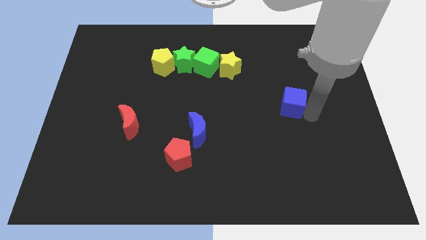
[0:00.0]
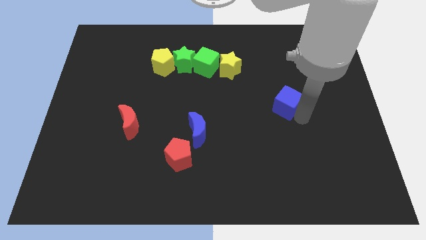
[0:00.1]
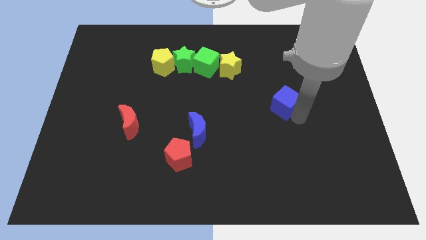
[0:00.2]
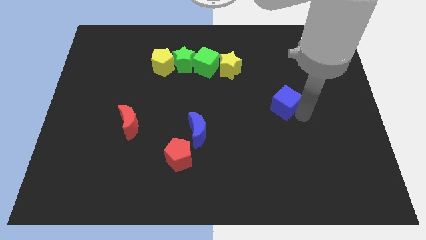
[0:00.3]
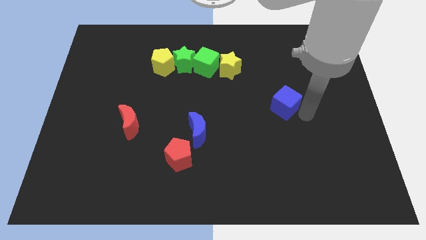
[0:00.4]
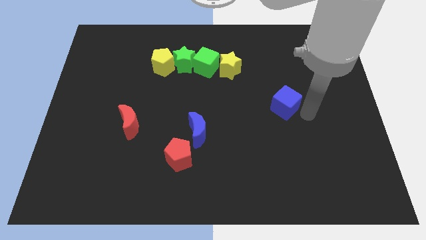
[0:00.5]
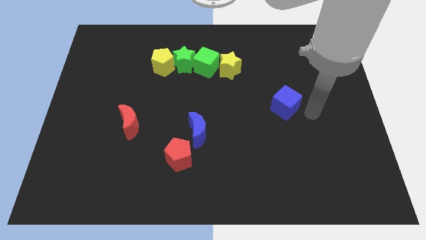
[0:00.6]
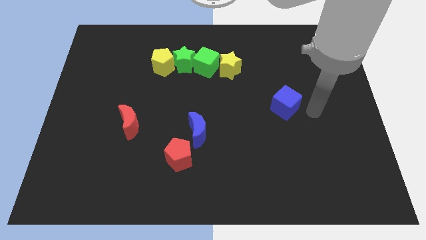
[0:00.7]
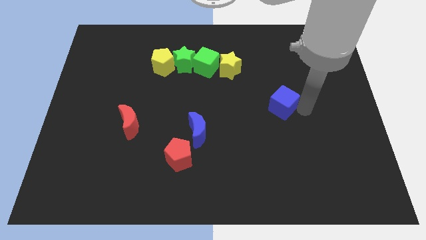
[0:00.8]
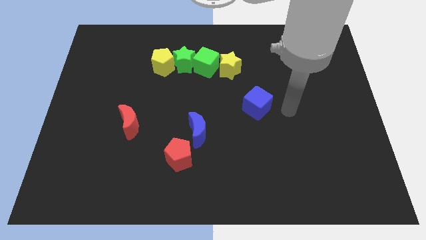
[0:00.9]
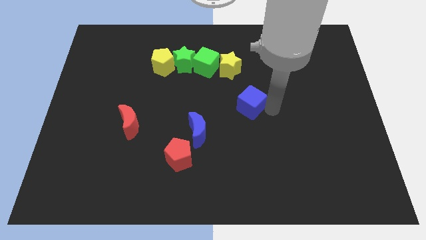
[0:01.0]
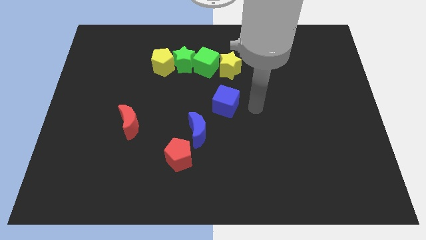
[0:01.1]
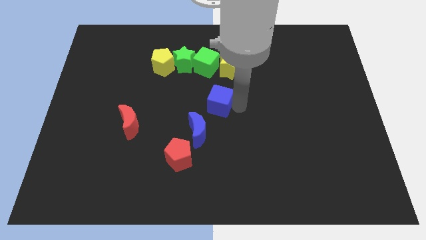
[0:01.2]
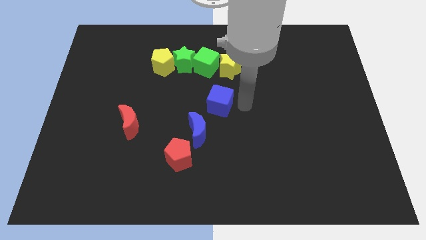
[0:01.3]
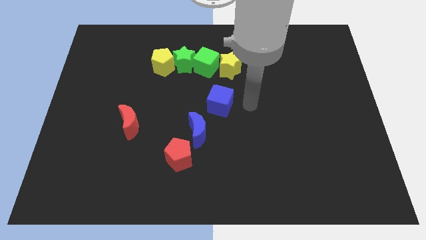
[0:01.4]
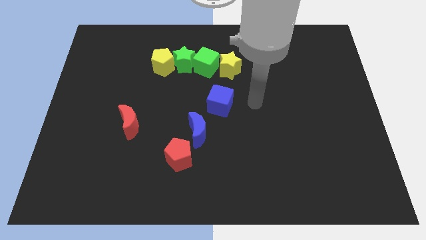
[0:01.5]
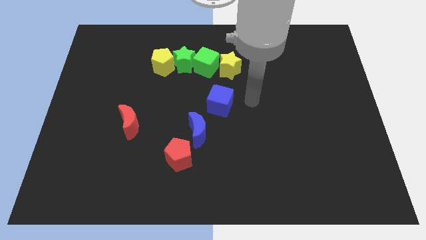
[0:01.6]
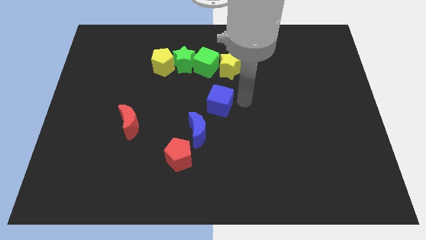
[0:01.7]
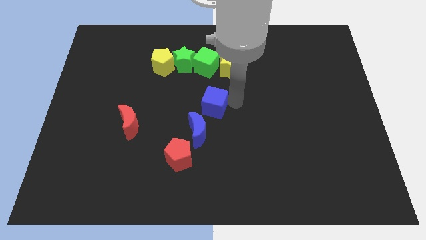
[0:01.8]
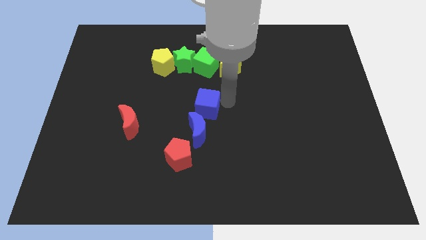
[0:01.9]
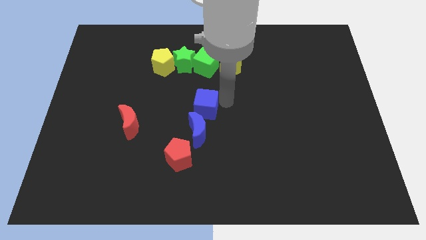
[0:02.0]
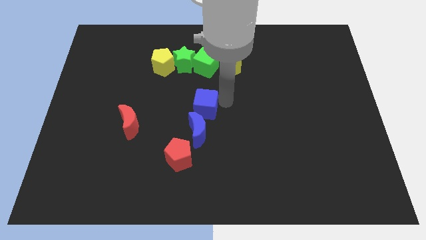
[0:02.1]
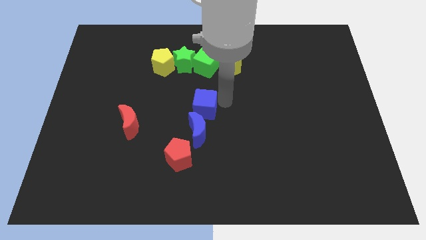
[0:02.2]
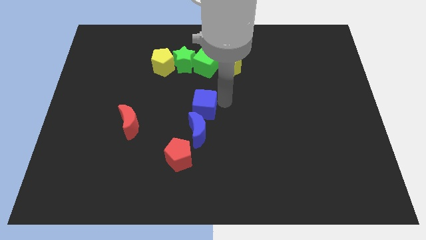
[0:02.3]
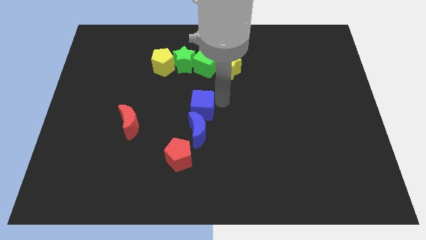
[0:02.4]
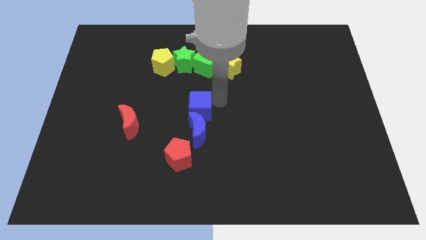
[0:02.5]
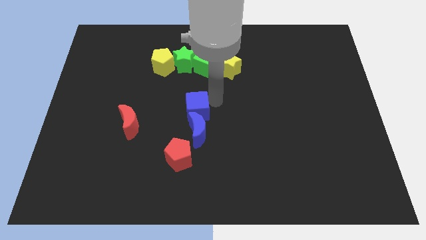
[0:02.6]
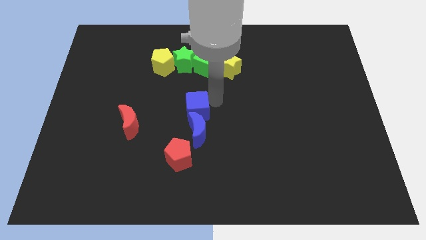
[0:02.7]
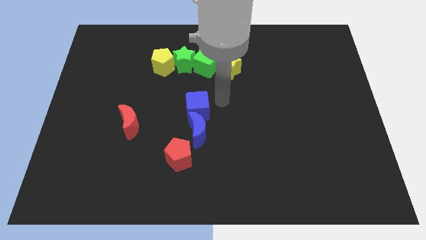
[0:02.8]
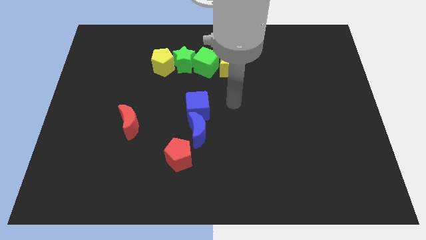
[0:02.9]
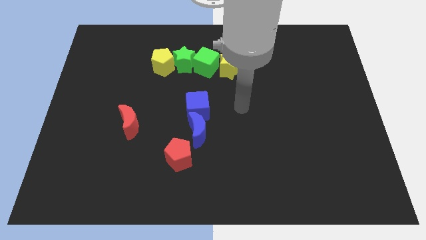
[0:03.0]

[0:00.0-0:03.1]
push the blue cube at the top side of the blue crescent

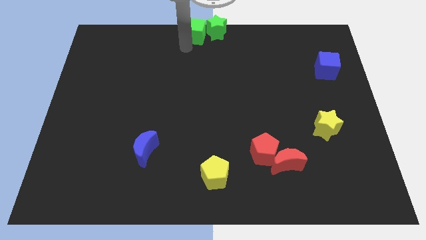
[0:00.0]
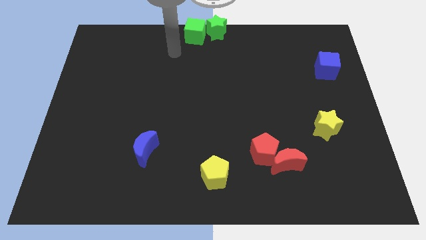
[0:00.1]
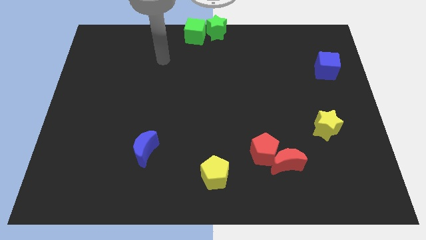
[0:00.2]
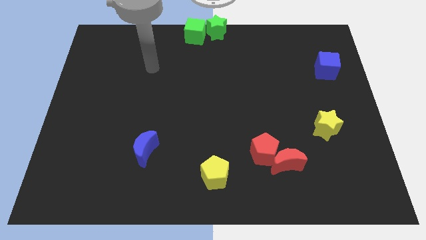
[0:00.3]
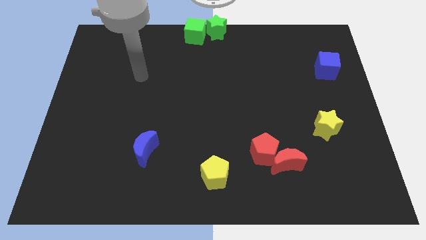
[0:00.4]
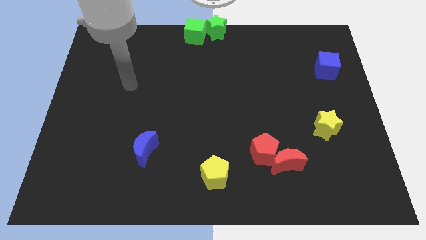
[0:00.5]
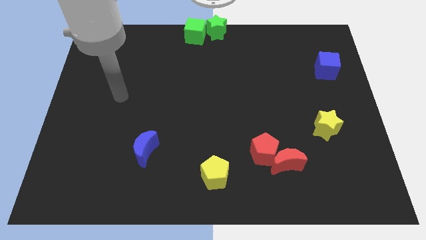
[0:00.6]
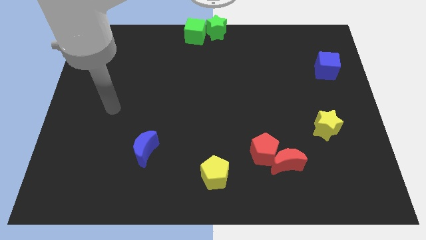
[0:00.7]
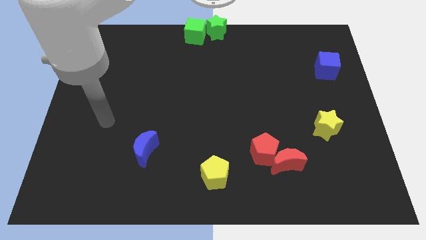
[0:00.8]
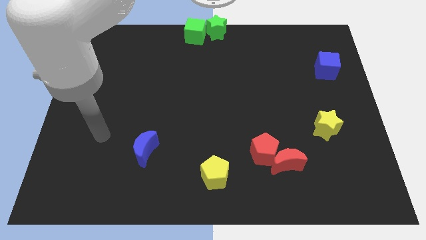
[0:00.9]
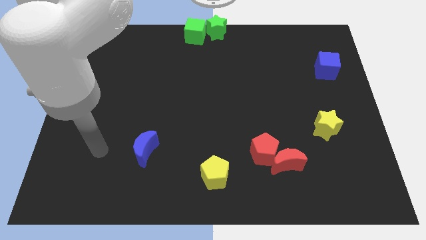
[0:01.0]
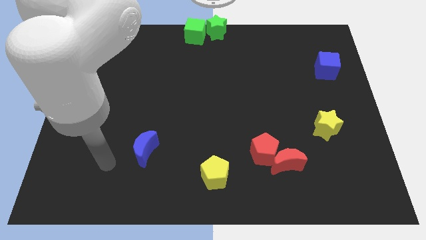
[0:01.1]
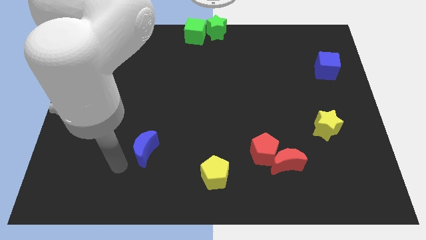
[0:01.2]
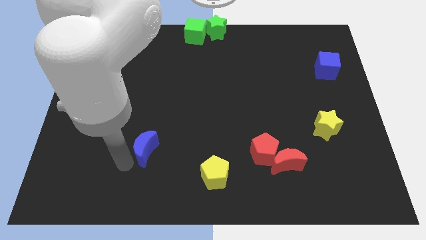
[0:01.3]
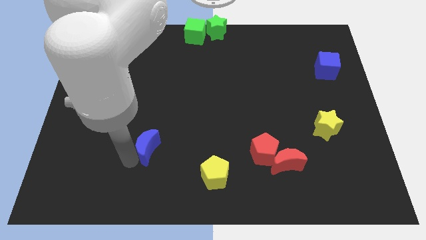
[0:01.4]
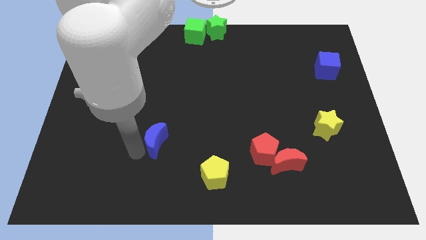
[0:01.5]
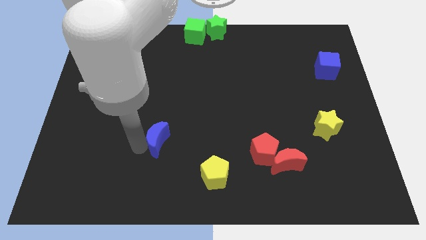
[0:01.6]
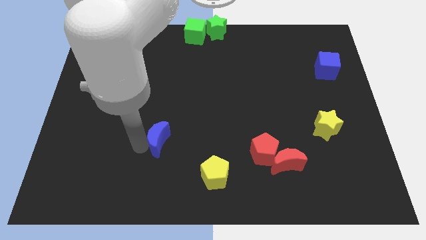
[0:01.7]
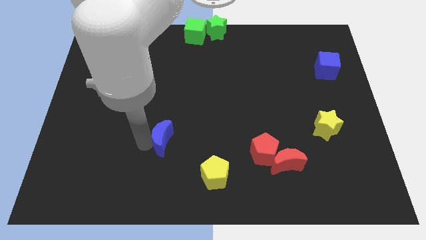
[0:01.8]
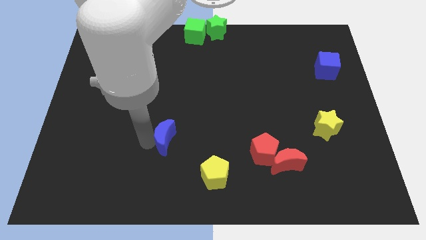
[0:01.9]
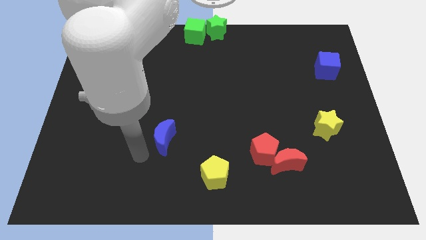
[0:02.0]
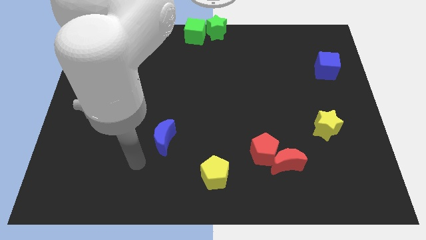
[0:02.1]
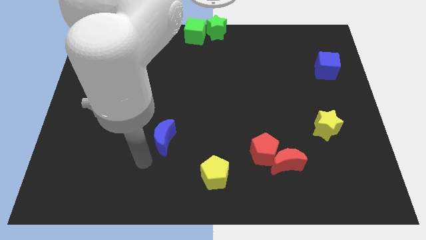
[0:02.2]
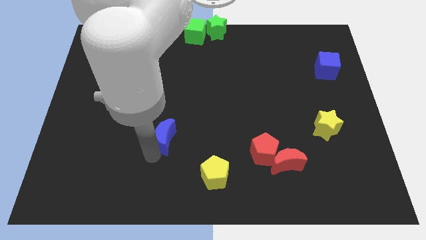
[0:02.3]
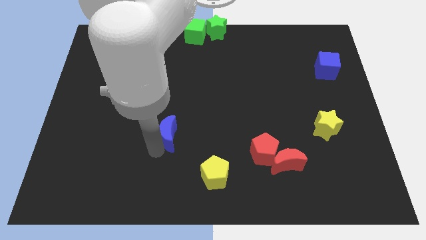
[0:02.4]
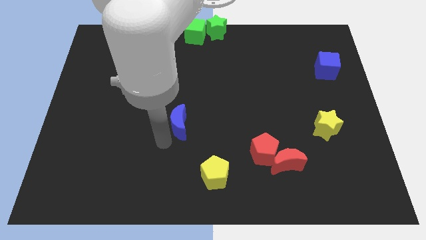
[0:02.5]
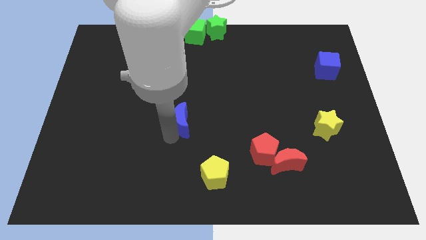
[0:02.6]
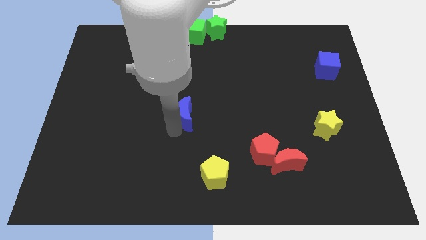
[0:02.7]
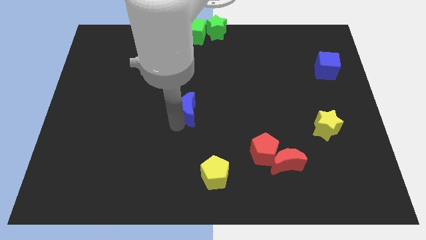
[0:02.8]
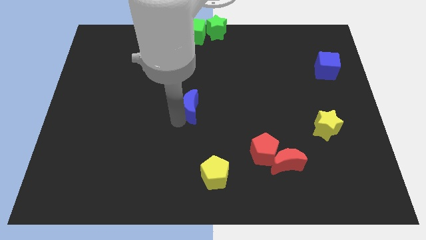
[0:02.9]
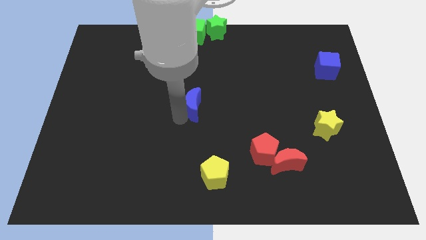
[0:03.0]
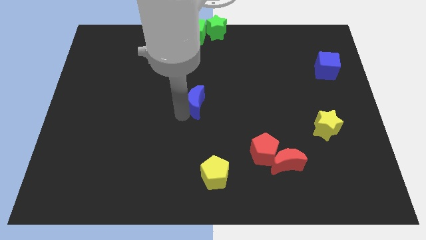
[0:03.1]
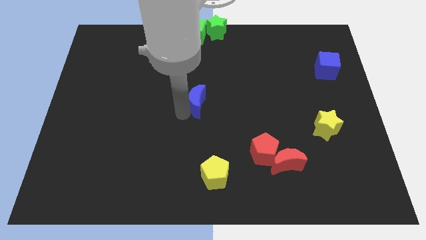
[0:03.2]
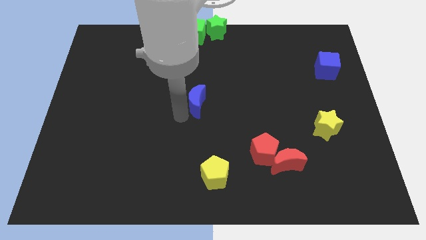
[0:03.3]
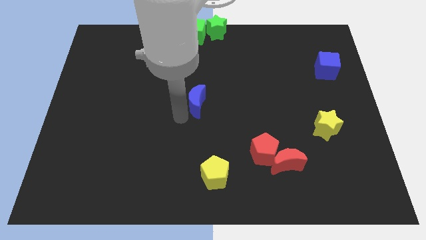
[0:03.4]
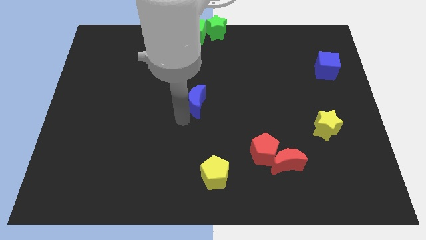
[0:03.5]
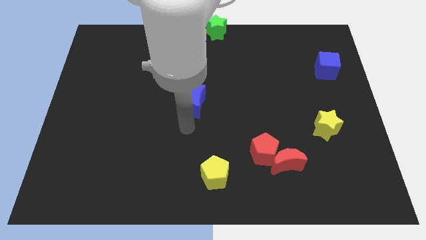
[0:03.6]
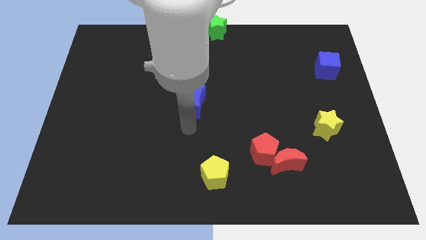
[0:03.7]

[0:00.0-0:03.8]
place the blue crescent at the center of the board

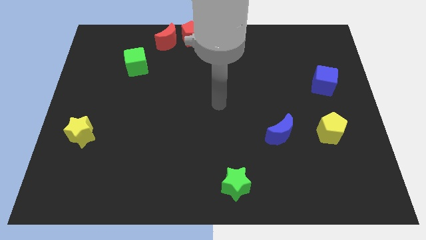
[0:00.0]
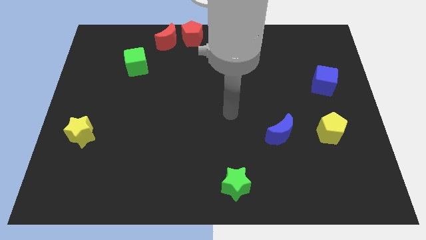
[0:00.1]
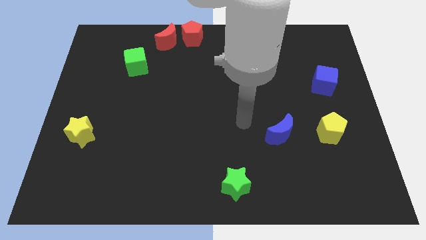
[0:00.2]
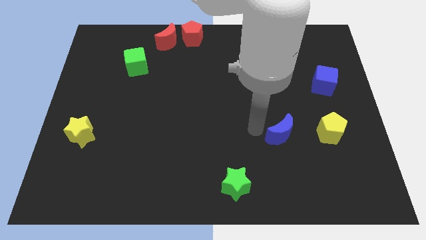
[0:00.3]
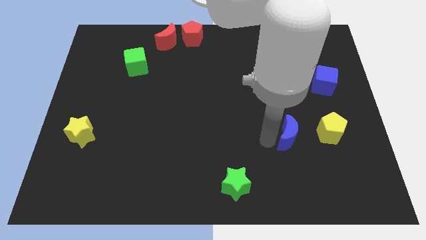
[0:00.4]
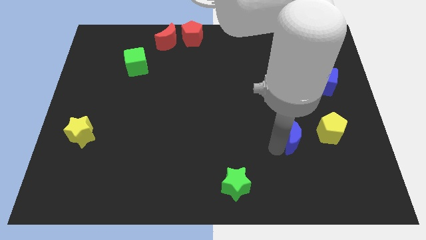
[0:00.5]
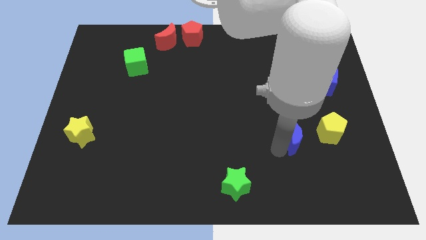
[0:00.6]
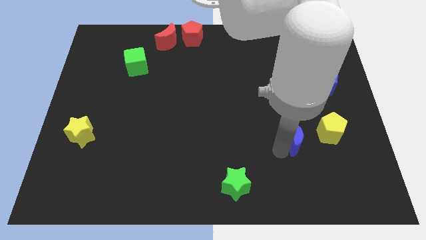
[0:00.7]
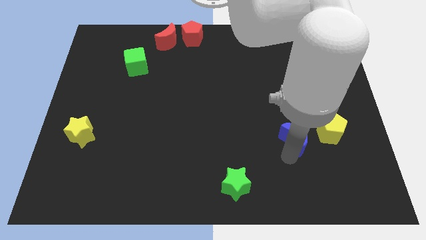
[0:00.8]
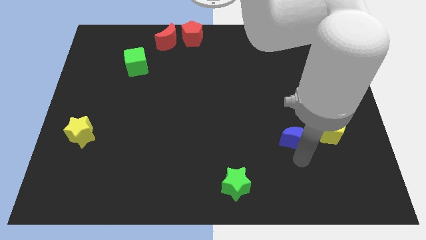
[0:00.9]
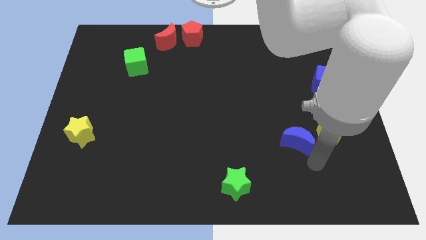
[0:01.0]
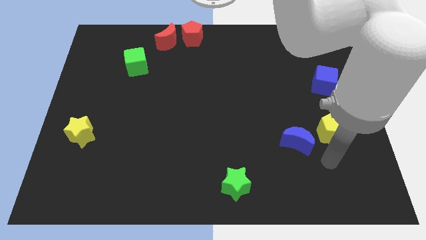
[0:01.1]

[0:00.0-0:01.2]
push the blue moon slightly to the right of the board

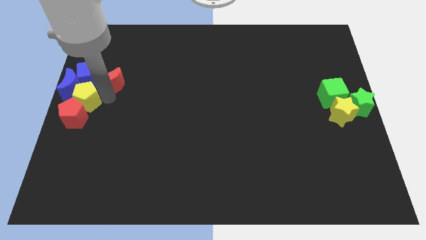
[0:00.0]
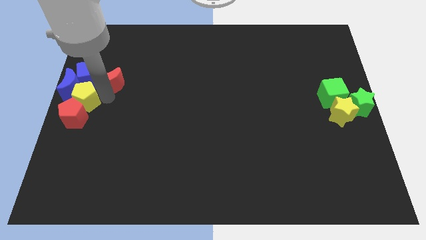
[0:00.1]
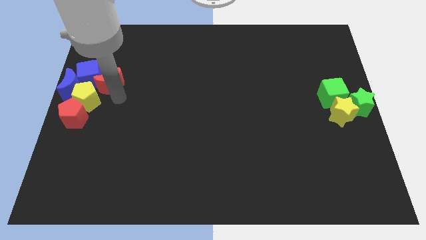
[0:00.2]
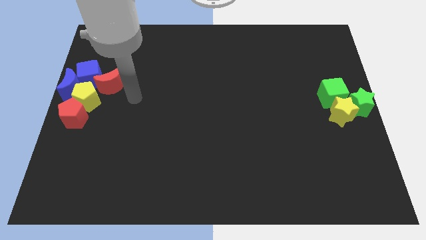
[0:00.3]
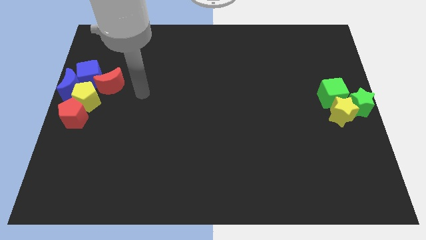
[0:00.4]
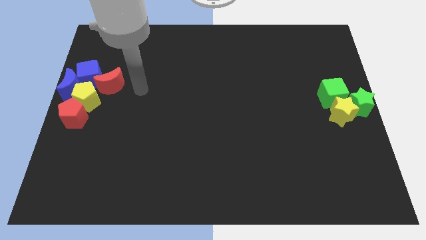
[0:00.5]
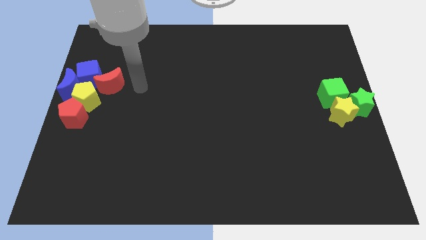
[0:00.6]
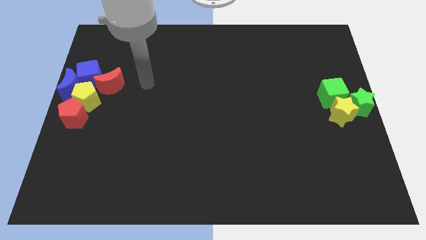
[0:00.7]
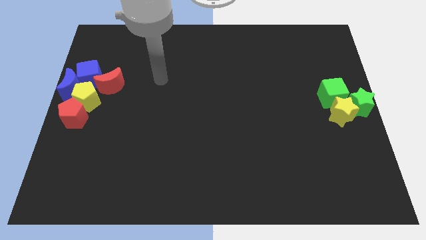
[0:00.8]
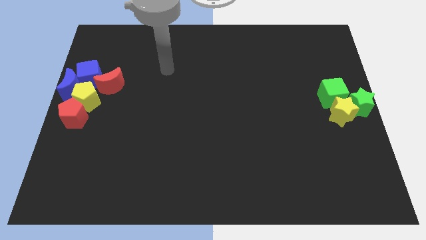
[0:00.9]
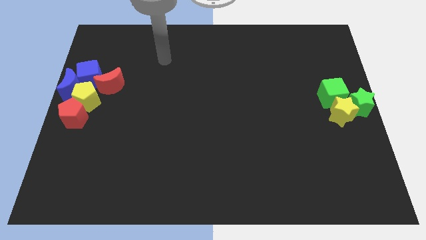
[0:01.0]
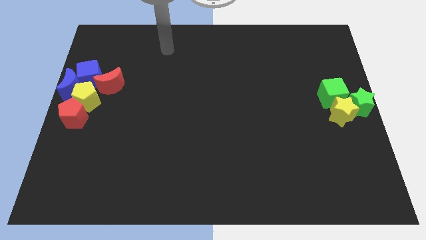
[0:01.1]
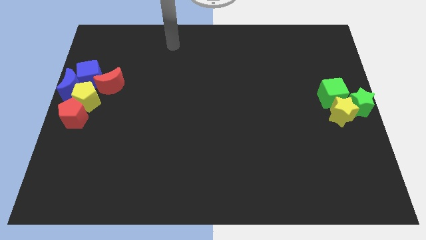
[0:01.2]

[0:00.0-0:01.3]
adjust the red crescent into the blue cube from the right
